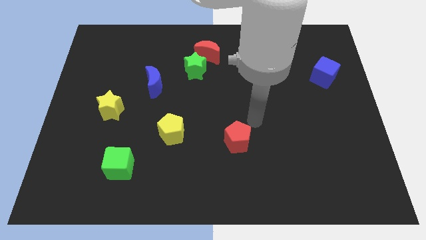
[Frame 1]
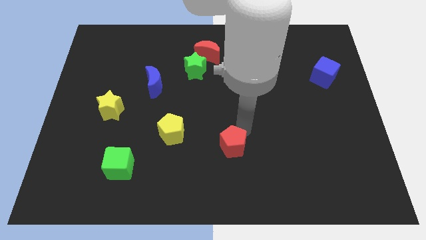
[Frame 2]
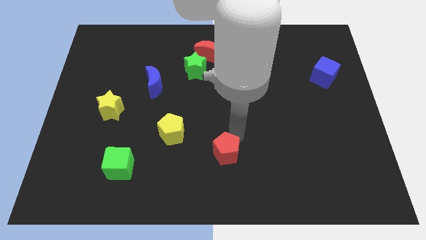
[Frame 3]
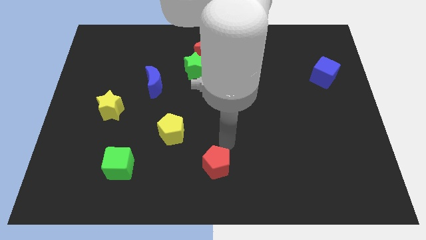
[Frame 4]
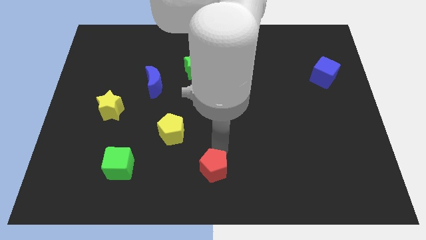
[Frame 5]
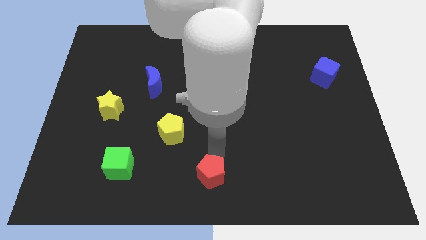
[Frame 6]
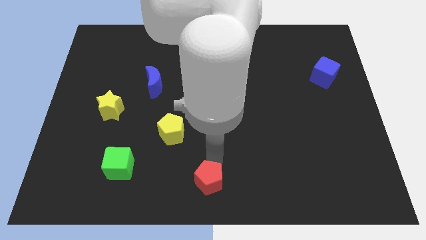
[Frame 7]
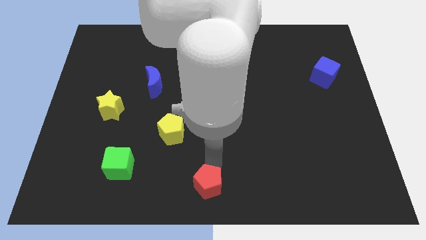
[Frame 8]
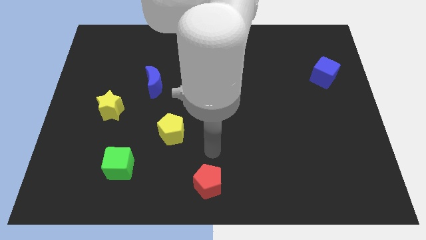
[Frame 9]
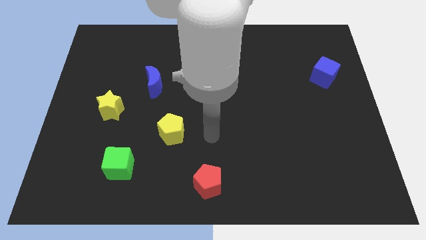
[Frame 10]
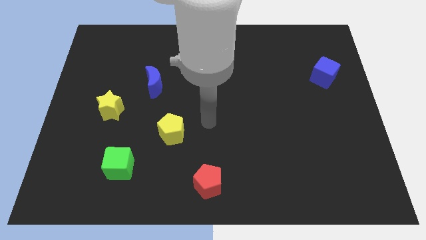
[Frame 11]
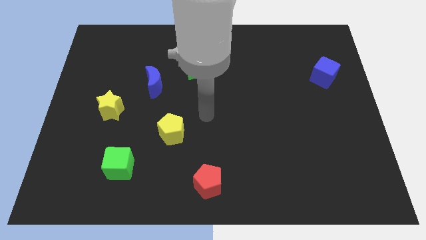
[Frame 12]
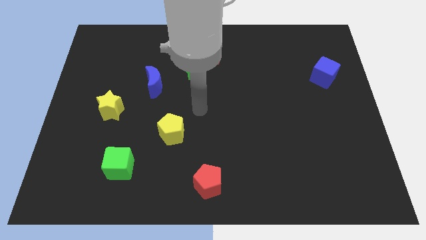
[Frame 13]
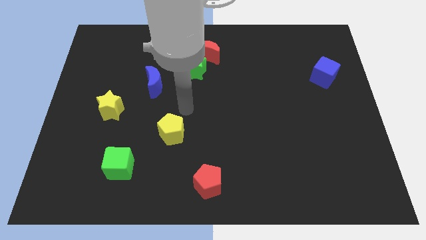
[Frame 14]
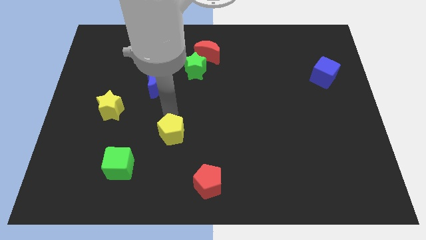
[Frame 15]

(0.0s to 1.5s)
move the red pentagon towards the bottom center

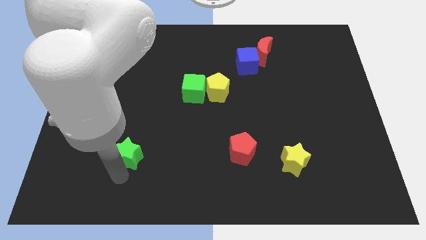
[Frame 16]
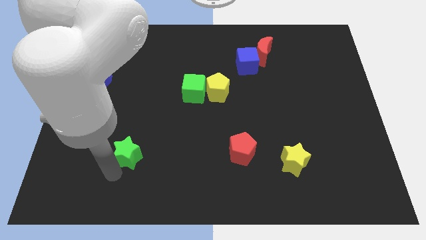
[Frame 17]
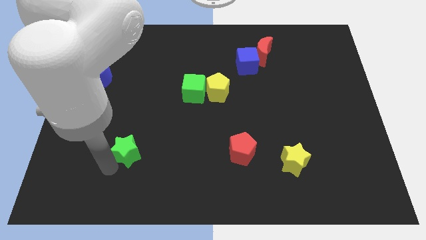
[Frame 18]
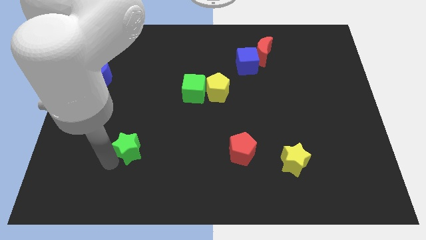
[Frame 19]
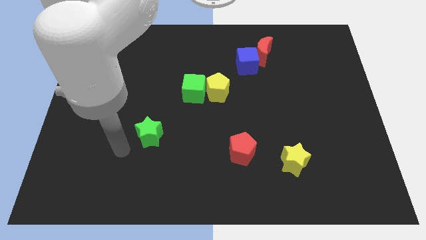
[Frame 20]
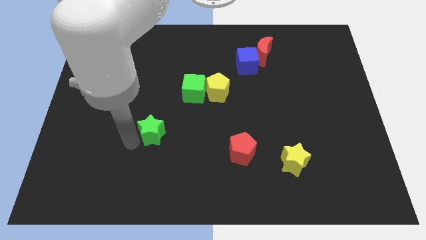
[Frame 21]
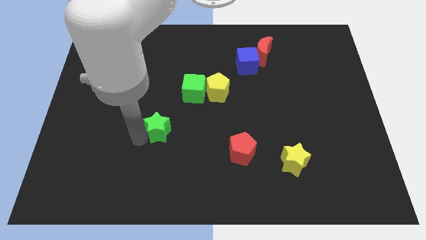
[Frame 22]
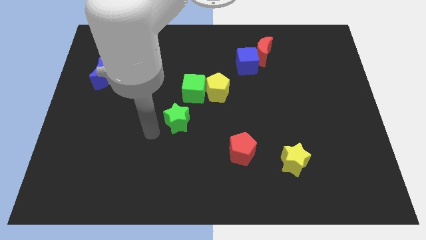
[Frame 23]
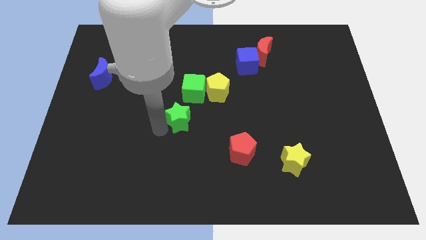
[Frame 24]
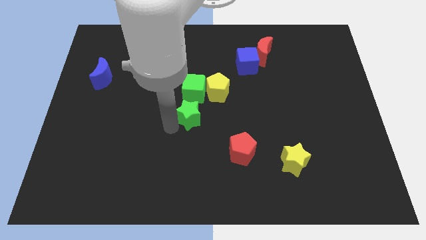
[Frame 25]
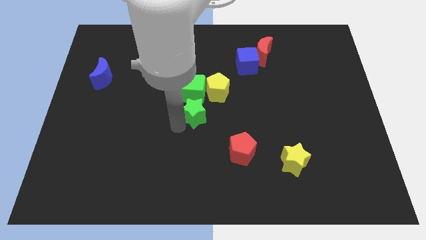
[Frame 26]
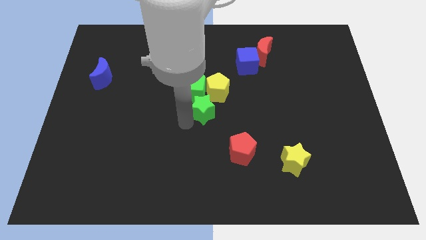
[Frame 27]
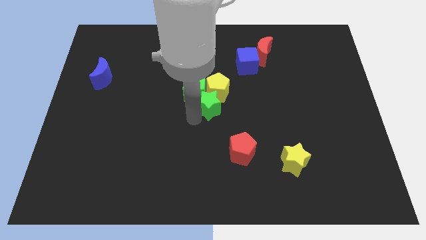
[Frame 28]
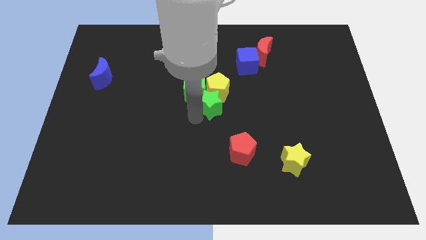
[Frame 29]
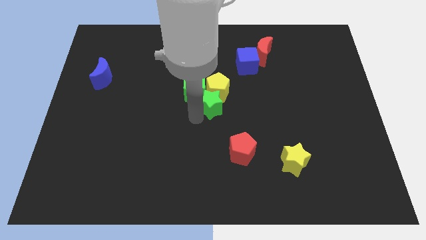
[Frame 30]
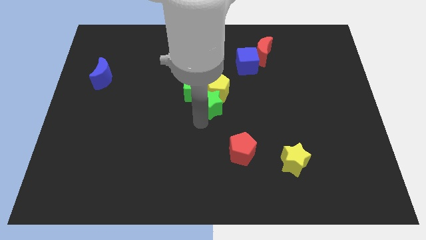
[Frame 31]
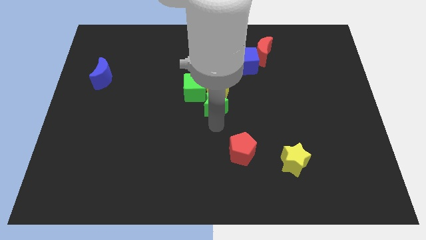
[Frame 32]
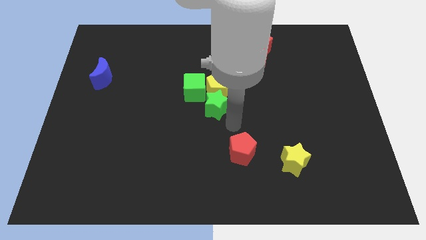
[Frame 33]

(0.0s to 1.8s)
move the green star to the bottom of the yellow pentagon

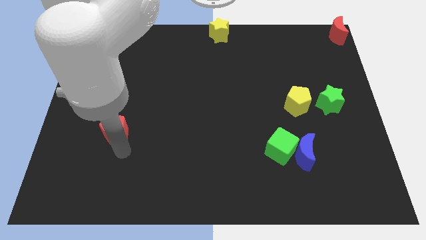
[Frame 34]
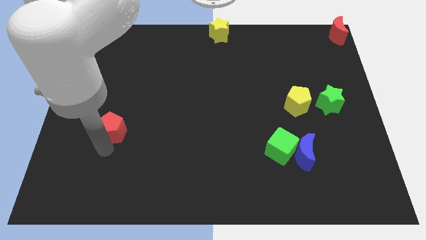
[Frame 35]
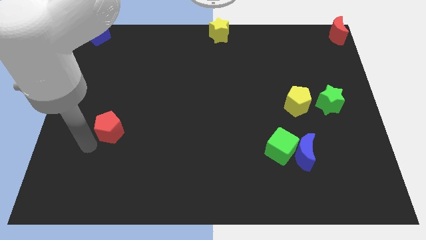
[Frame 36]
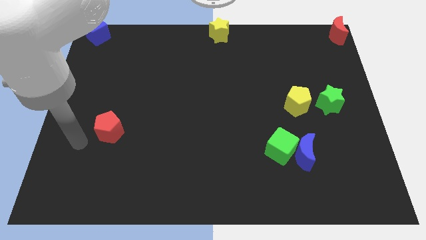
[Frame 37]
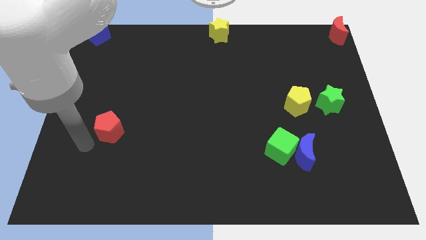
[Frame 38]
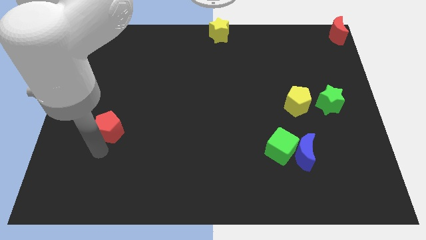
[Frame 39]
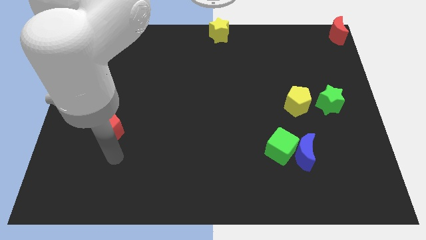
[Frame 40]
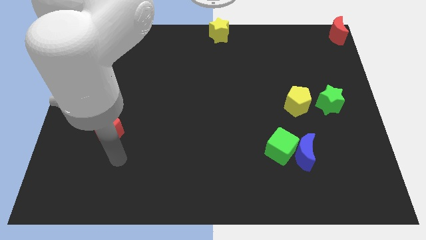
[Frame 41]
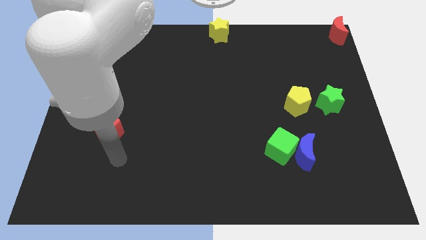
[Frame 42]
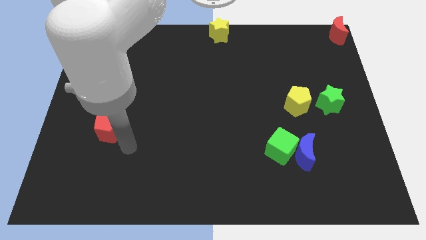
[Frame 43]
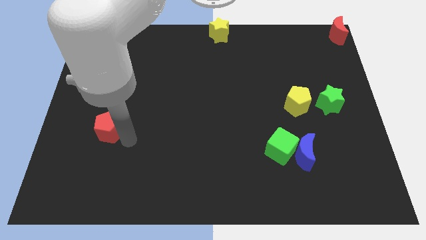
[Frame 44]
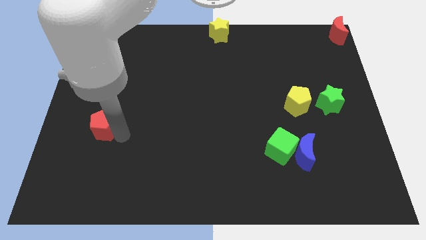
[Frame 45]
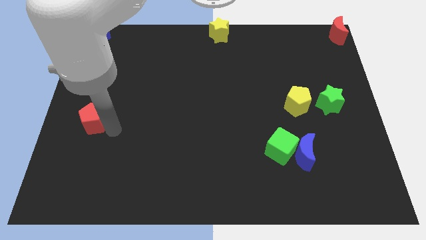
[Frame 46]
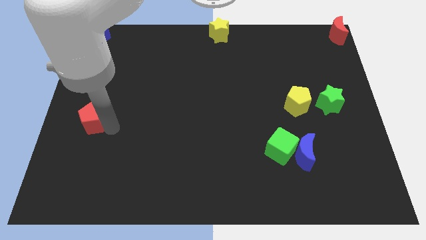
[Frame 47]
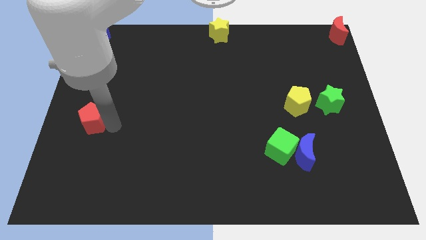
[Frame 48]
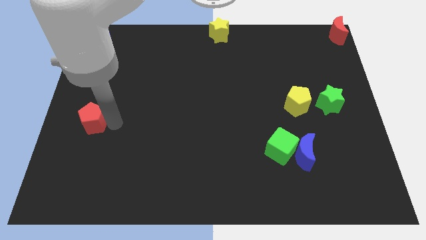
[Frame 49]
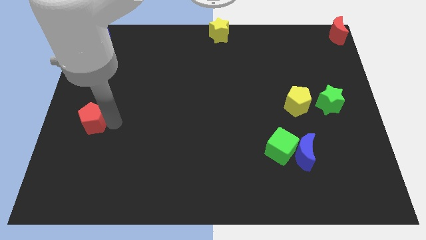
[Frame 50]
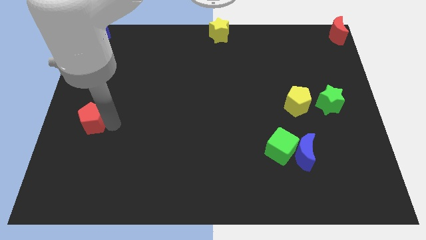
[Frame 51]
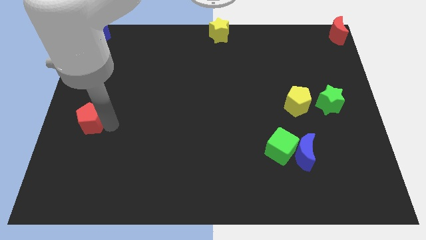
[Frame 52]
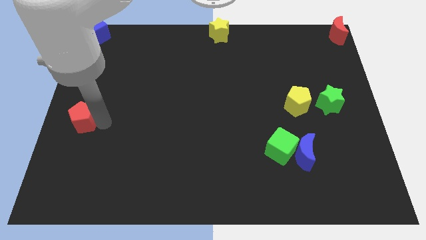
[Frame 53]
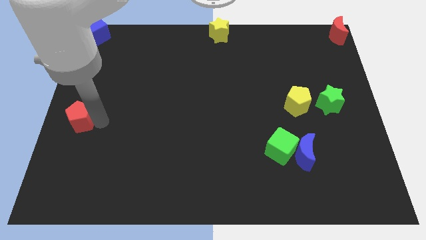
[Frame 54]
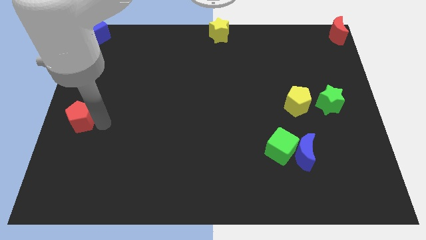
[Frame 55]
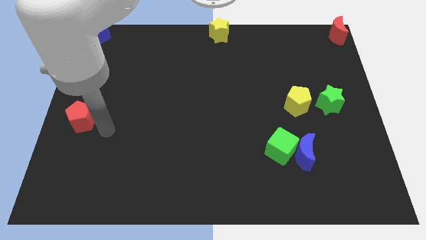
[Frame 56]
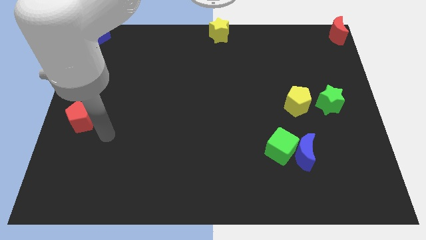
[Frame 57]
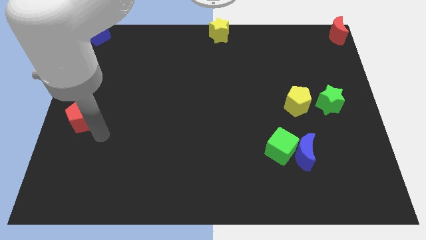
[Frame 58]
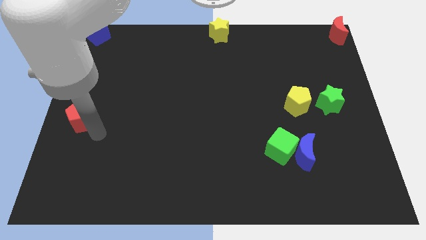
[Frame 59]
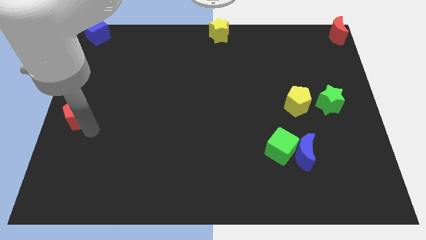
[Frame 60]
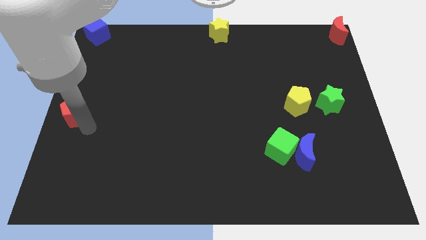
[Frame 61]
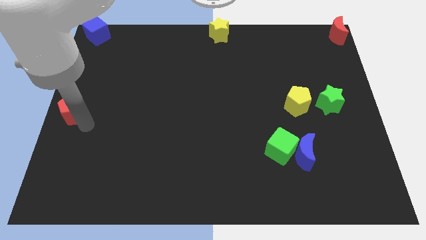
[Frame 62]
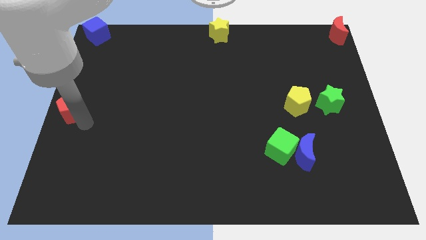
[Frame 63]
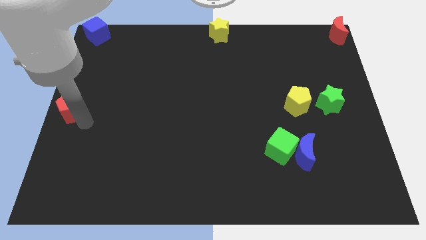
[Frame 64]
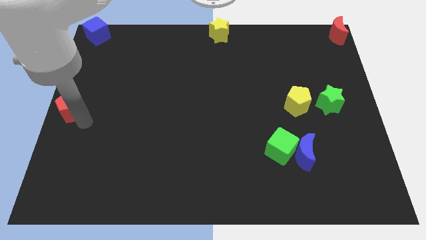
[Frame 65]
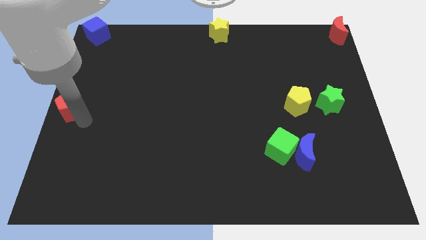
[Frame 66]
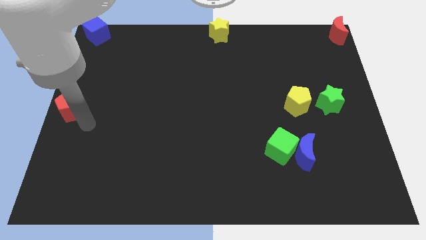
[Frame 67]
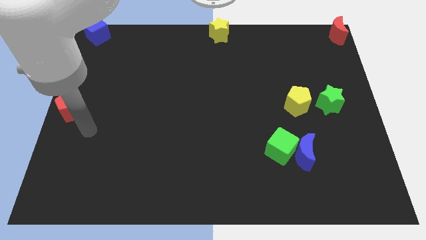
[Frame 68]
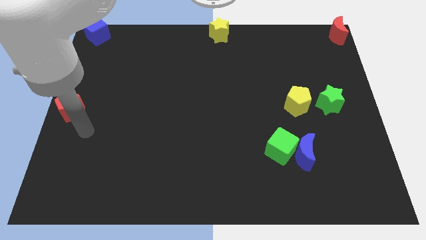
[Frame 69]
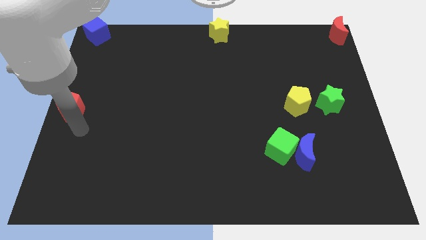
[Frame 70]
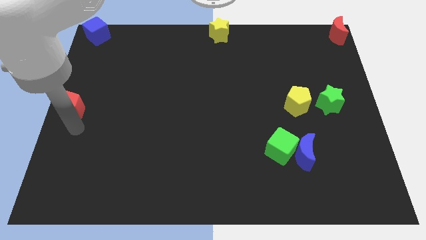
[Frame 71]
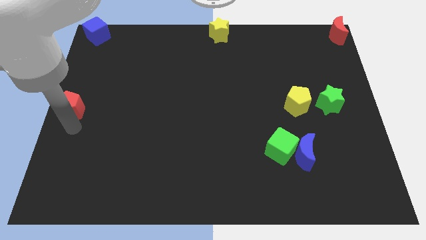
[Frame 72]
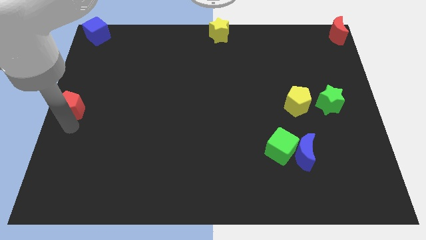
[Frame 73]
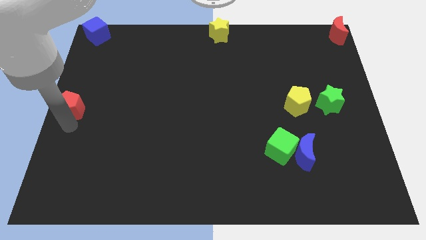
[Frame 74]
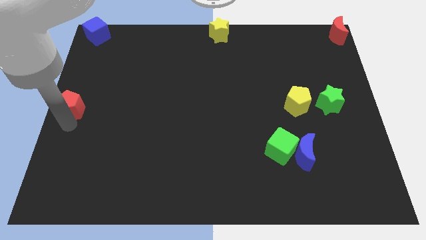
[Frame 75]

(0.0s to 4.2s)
push the red pentagon to the center left of the board

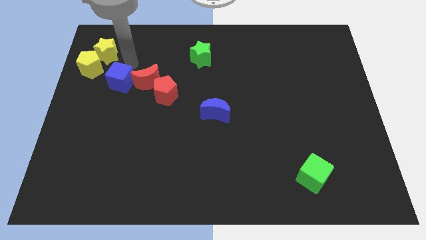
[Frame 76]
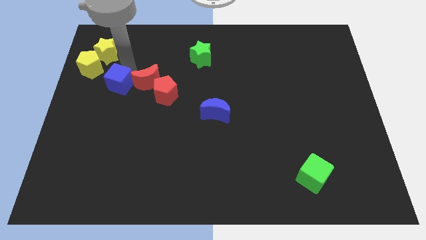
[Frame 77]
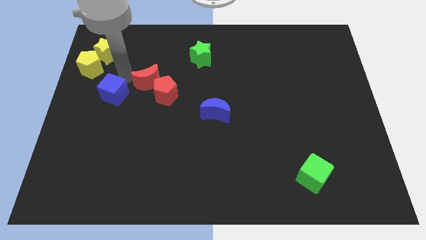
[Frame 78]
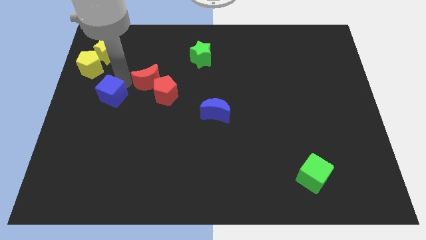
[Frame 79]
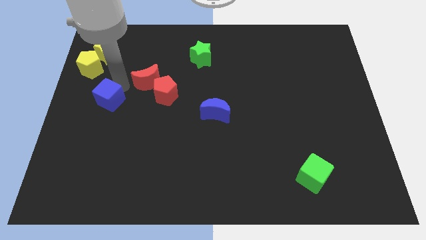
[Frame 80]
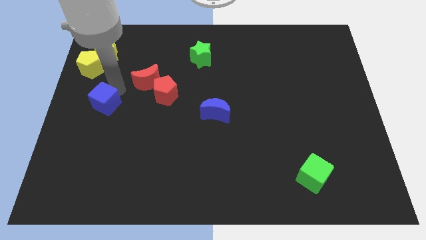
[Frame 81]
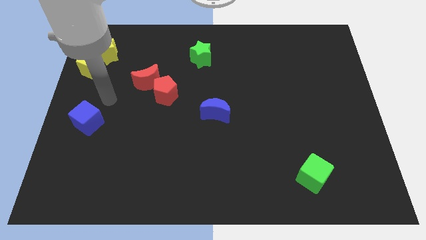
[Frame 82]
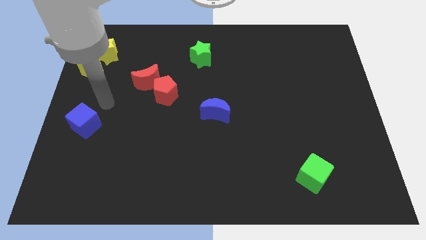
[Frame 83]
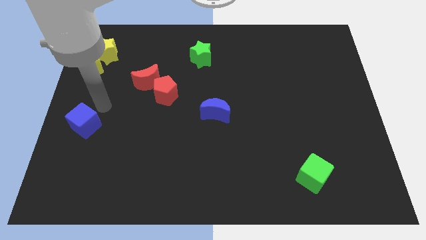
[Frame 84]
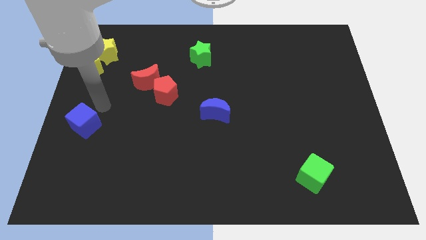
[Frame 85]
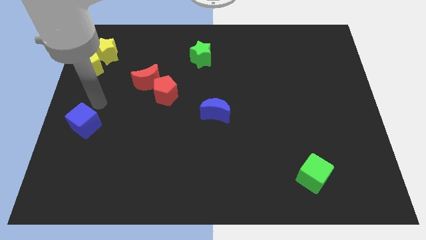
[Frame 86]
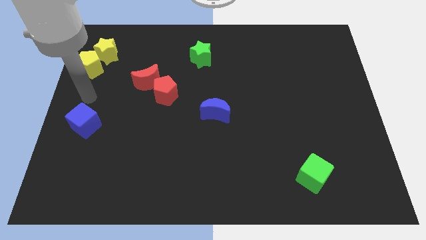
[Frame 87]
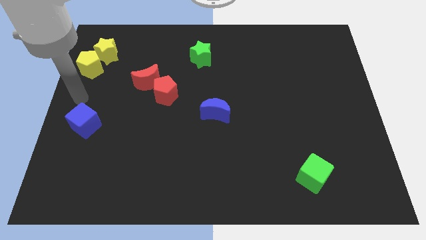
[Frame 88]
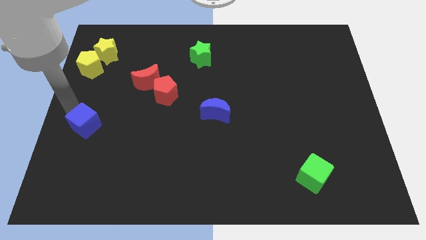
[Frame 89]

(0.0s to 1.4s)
separate the blue cube from the red crescent

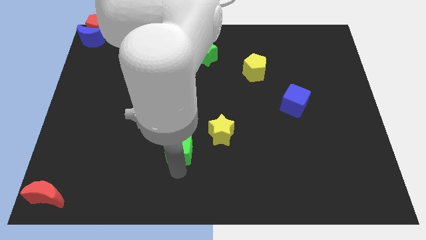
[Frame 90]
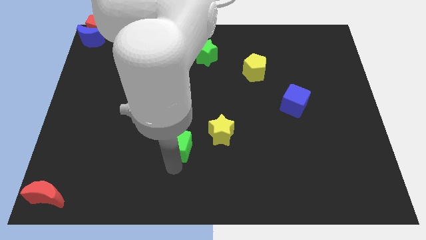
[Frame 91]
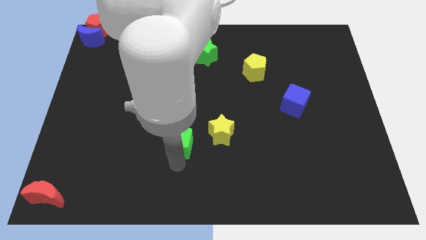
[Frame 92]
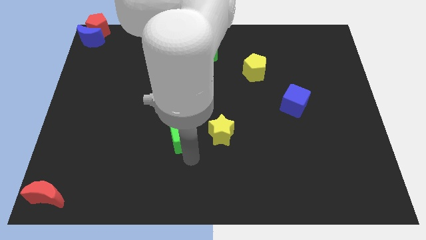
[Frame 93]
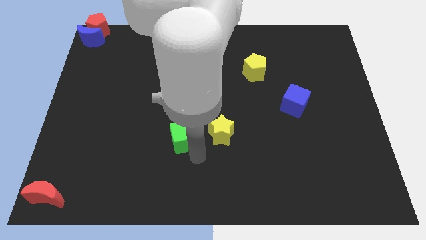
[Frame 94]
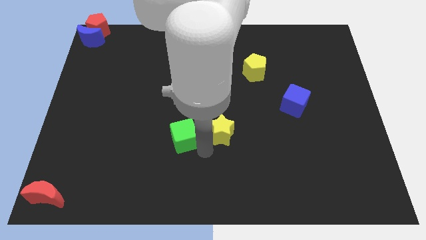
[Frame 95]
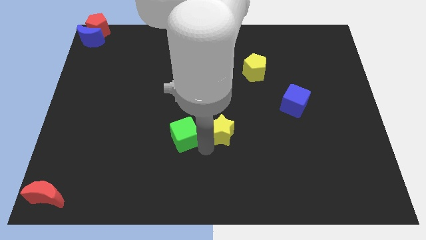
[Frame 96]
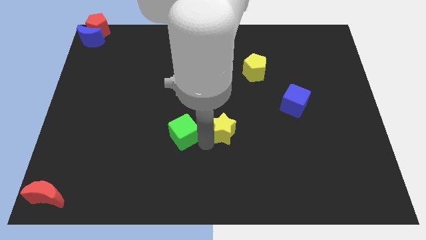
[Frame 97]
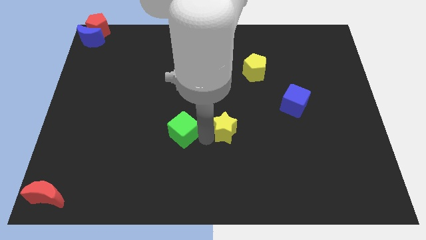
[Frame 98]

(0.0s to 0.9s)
place your arm between green cube and yellow star
